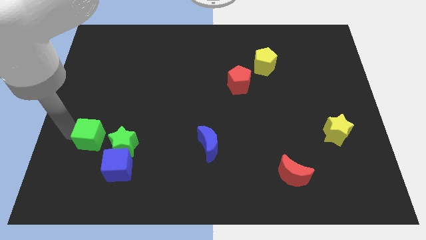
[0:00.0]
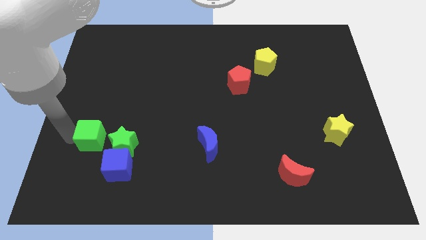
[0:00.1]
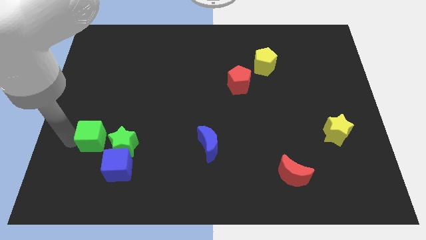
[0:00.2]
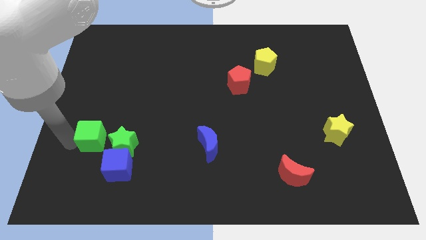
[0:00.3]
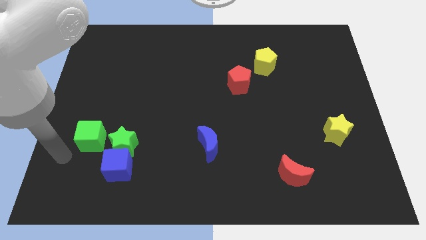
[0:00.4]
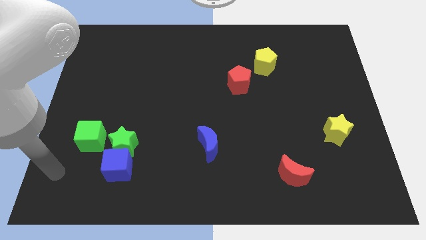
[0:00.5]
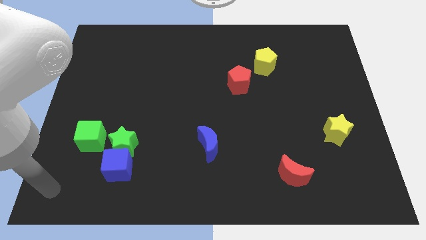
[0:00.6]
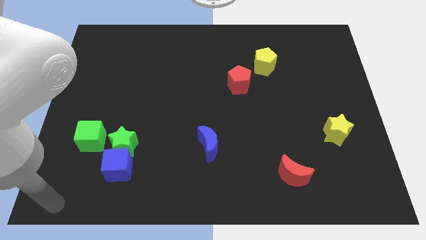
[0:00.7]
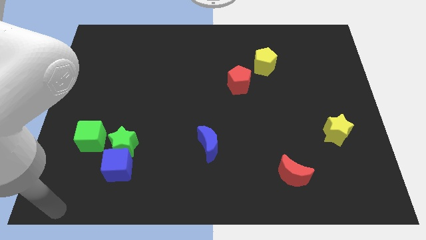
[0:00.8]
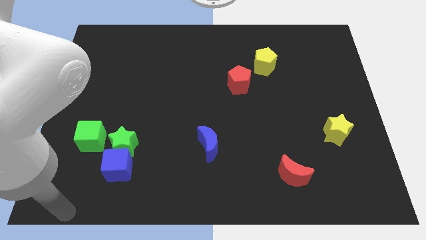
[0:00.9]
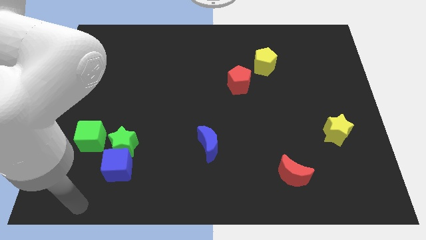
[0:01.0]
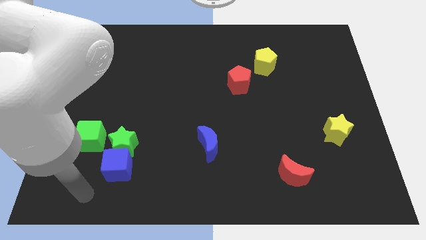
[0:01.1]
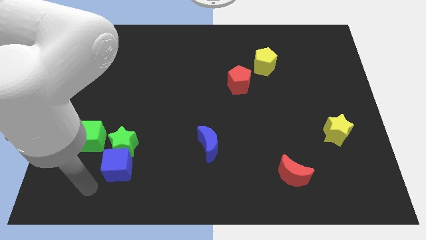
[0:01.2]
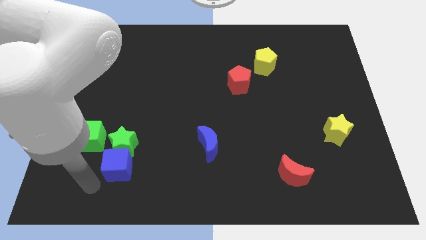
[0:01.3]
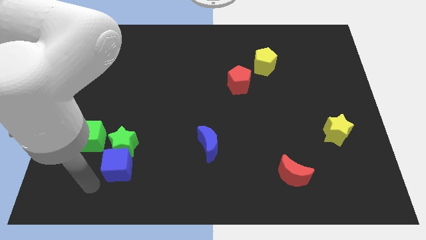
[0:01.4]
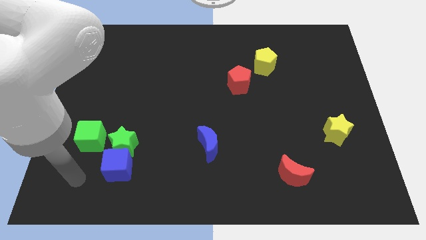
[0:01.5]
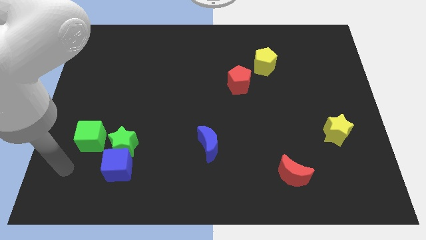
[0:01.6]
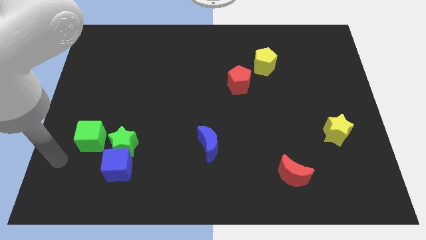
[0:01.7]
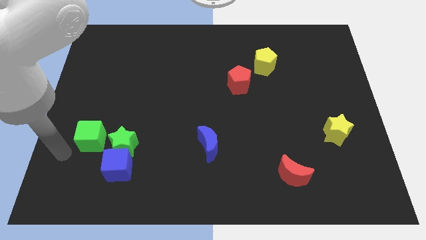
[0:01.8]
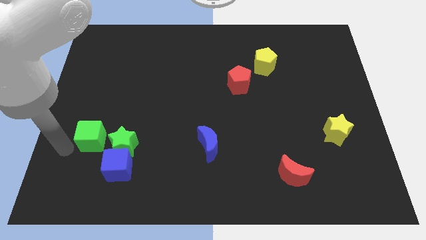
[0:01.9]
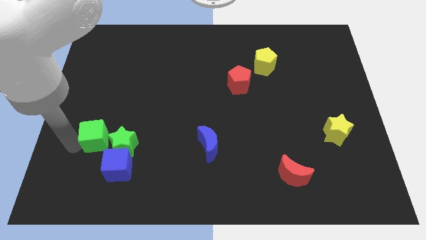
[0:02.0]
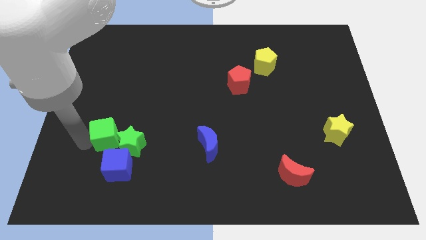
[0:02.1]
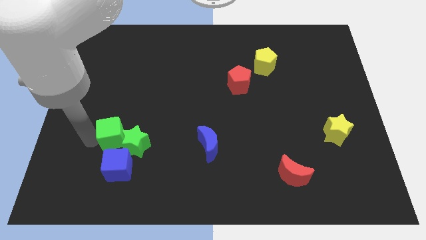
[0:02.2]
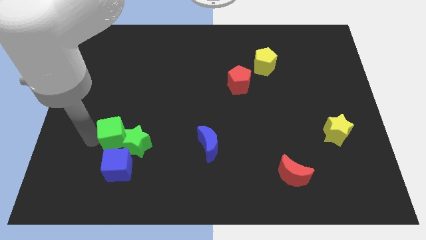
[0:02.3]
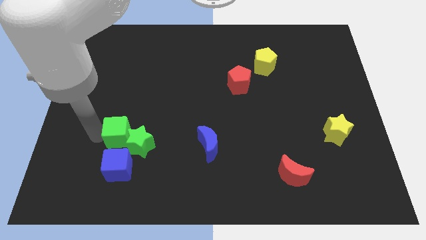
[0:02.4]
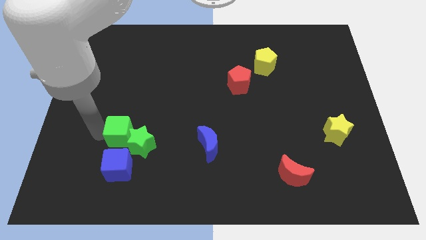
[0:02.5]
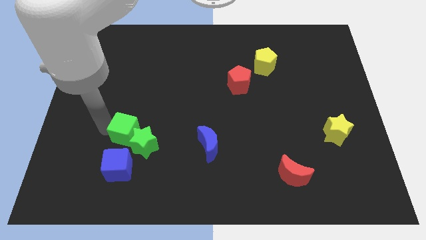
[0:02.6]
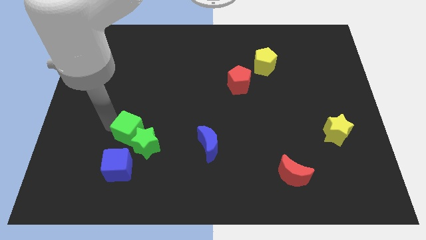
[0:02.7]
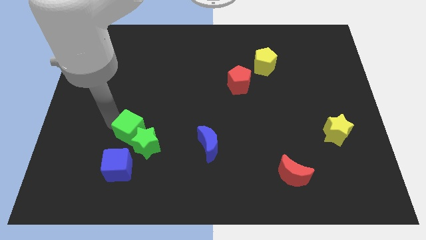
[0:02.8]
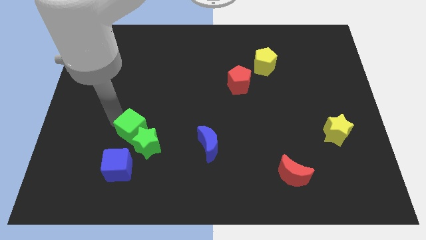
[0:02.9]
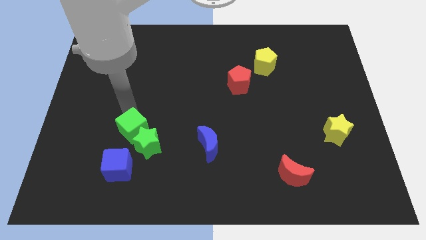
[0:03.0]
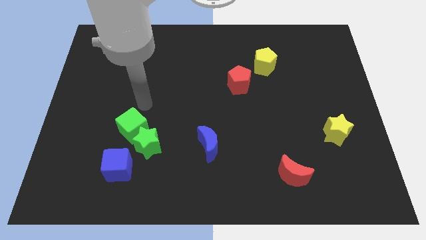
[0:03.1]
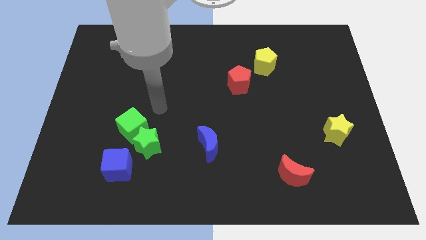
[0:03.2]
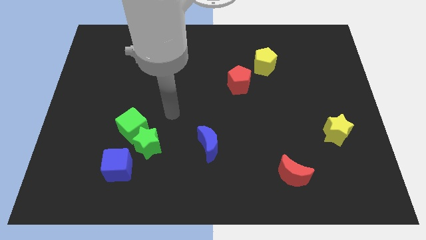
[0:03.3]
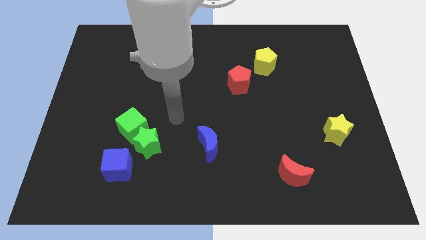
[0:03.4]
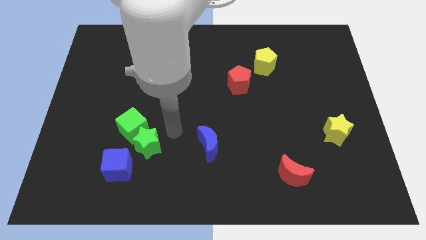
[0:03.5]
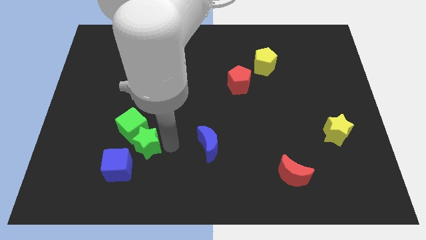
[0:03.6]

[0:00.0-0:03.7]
place the green cube above the green star

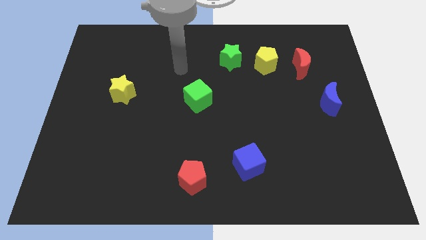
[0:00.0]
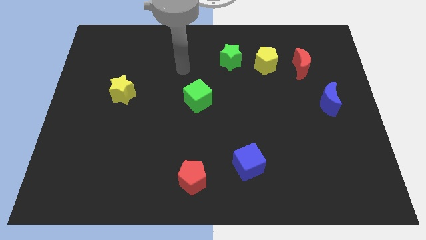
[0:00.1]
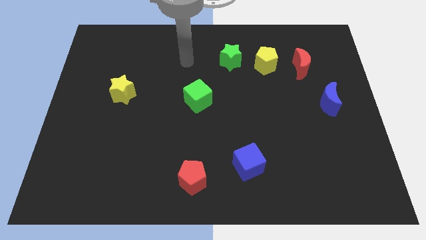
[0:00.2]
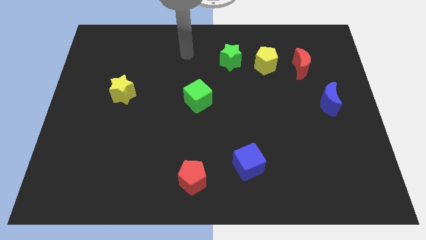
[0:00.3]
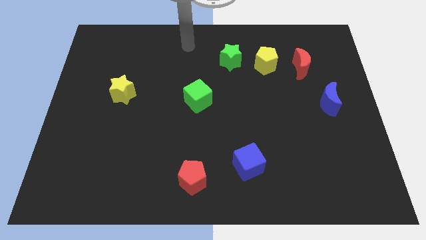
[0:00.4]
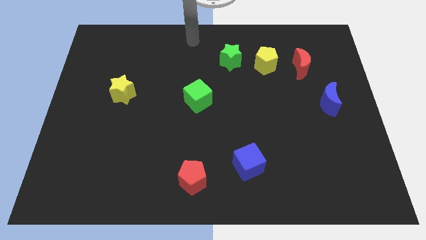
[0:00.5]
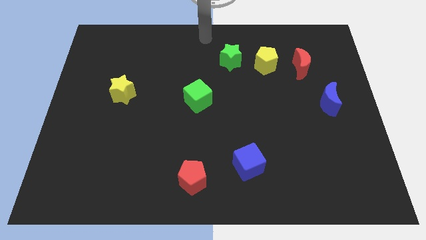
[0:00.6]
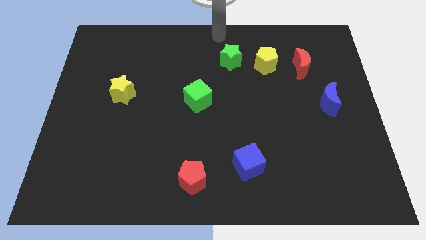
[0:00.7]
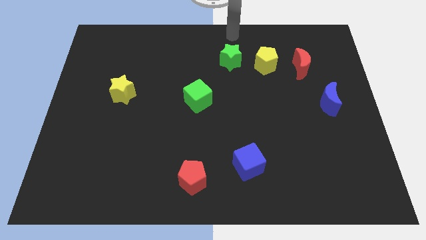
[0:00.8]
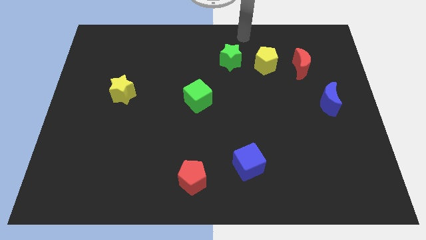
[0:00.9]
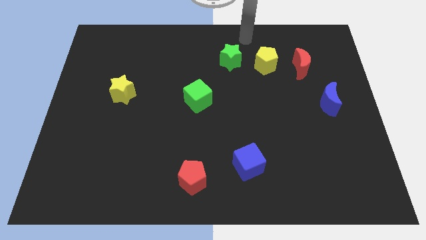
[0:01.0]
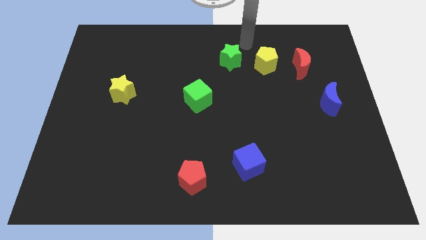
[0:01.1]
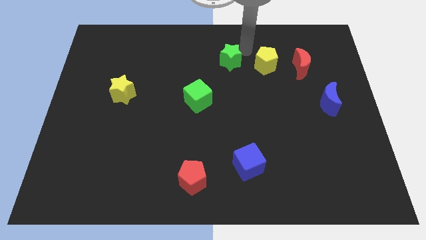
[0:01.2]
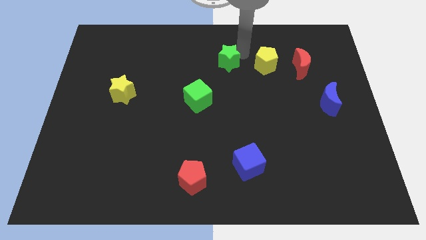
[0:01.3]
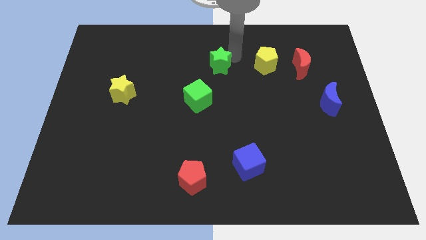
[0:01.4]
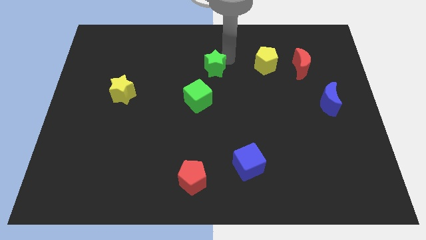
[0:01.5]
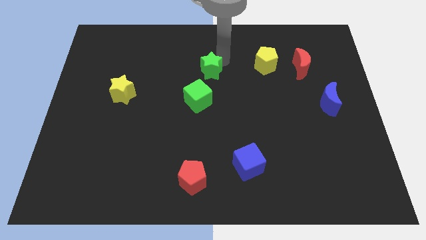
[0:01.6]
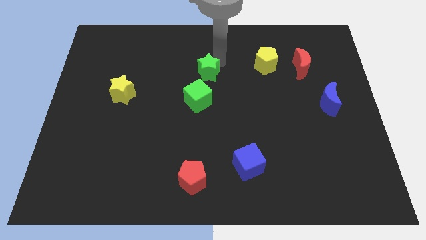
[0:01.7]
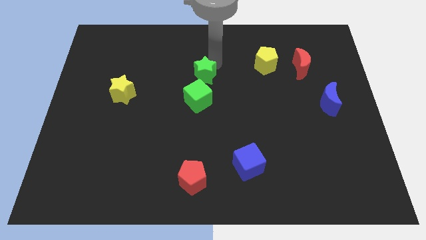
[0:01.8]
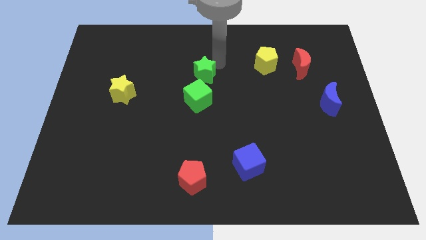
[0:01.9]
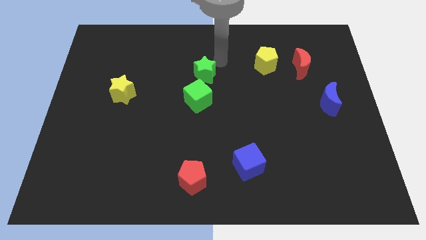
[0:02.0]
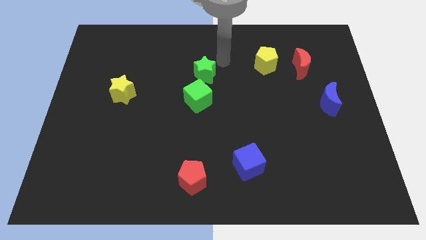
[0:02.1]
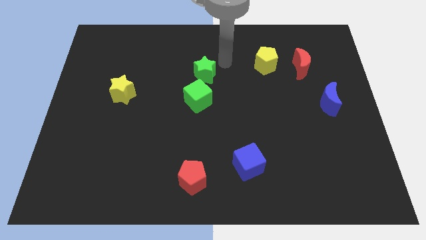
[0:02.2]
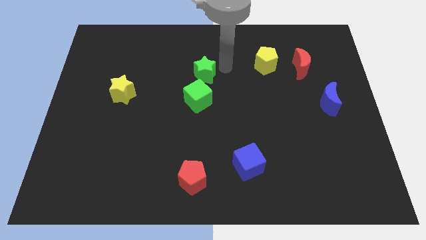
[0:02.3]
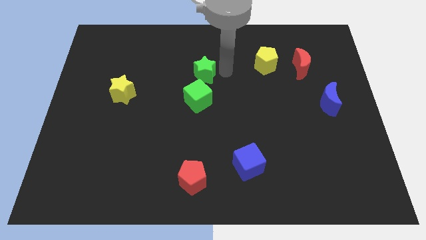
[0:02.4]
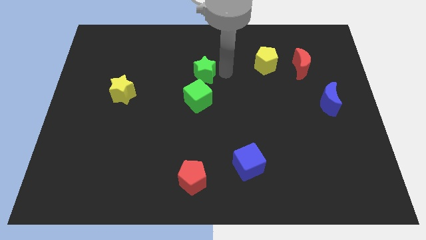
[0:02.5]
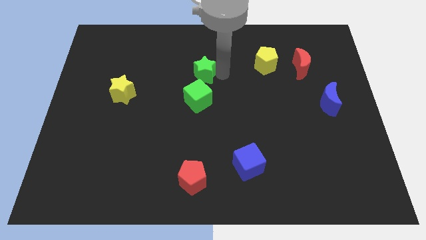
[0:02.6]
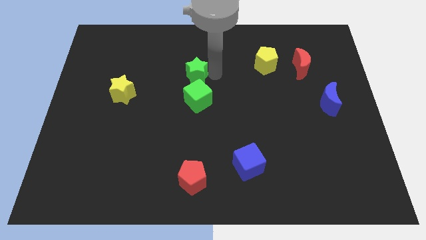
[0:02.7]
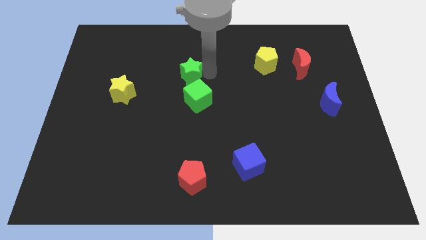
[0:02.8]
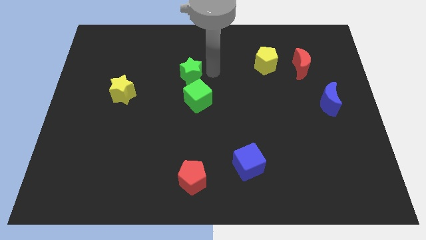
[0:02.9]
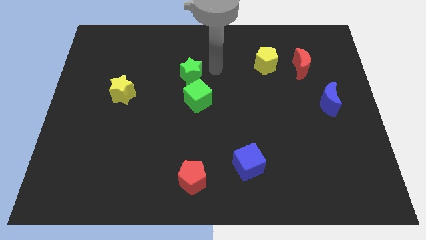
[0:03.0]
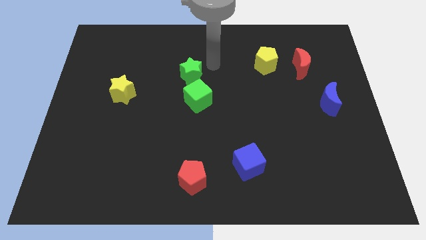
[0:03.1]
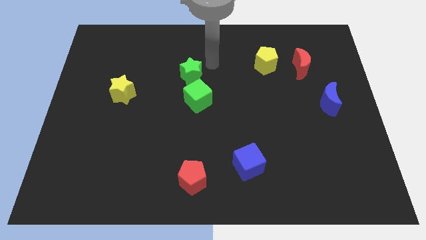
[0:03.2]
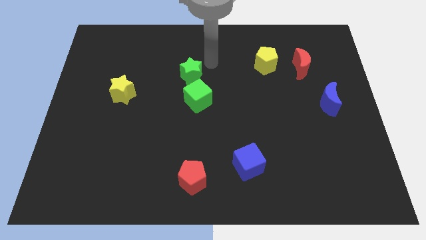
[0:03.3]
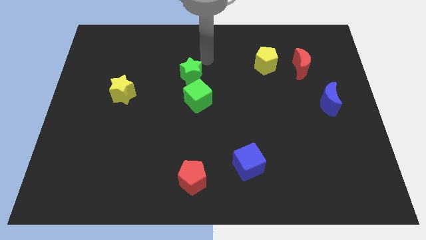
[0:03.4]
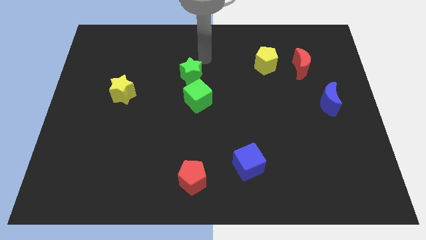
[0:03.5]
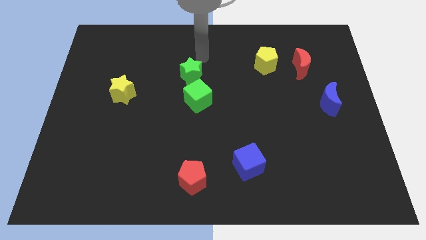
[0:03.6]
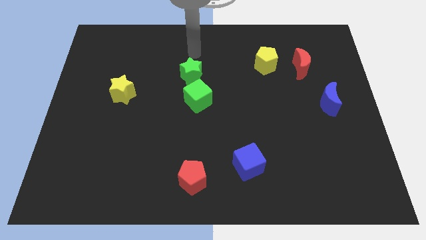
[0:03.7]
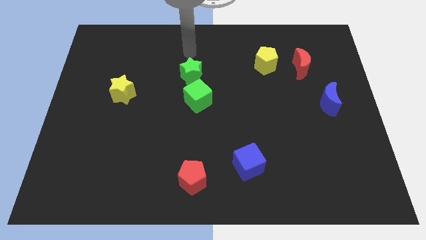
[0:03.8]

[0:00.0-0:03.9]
put the green star above the green cube

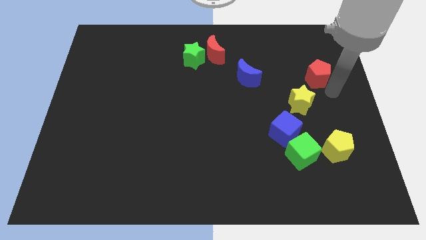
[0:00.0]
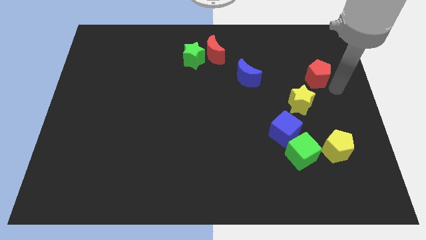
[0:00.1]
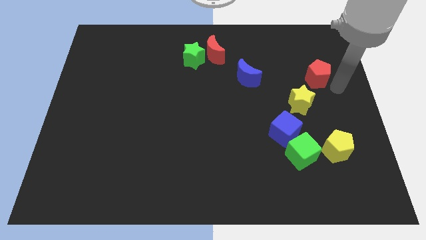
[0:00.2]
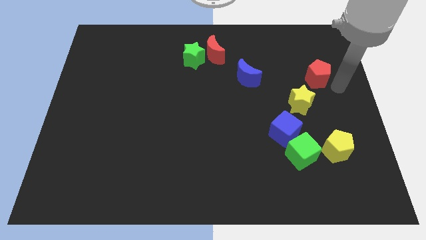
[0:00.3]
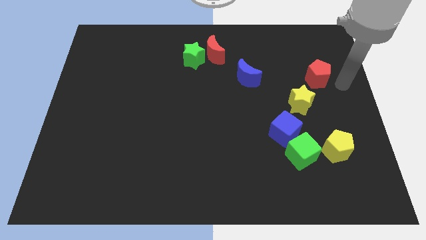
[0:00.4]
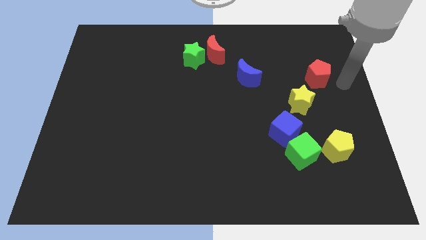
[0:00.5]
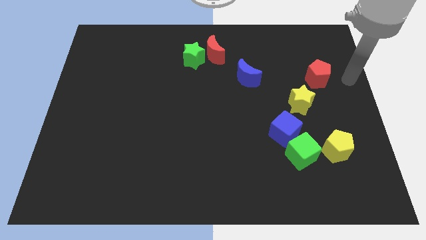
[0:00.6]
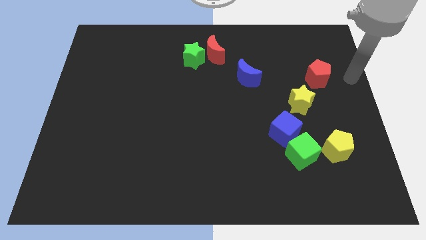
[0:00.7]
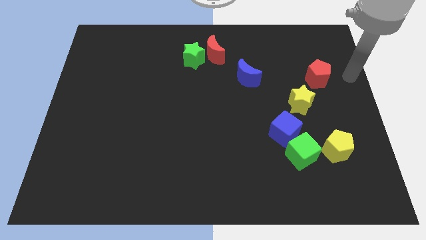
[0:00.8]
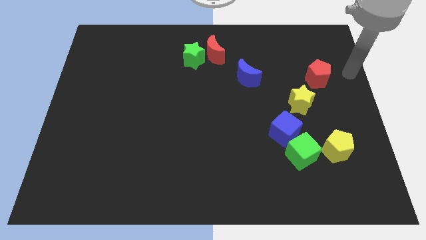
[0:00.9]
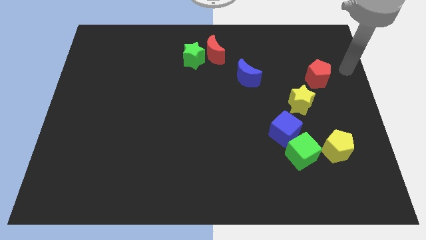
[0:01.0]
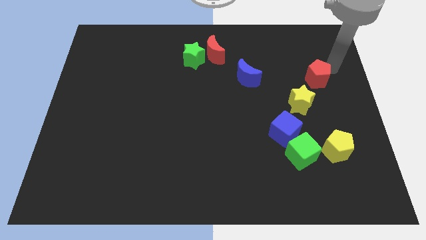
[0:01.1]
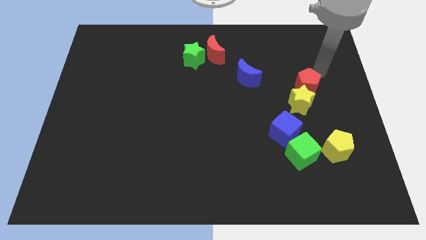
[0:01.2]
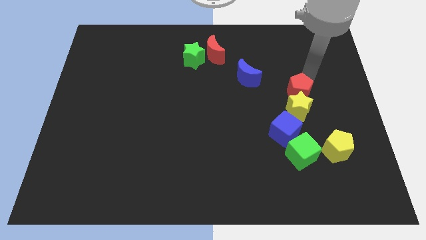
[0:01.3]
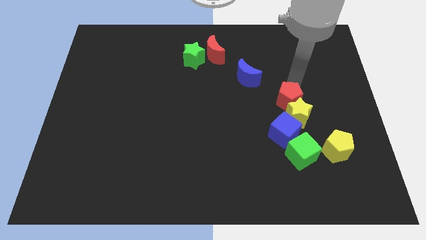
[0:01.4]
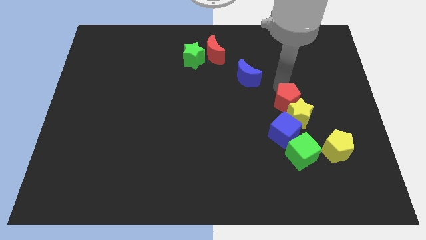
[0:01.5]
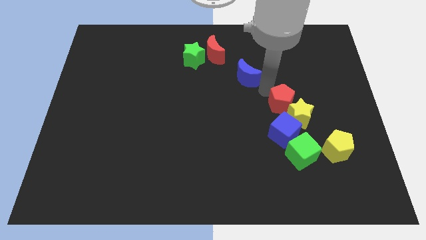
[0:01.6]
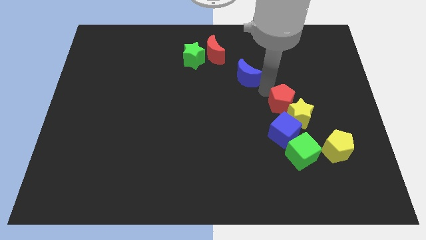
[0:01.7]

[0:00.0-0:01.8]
move red pentagon between yellow star and blue moon
